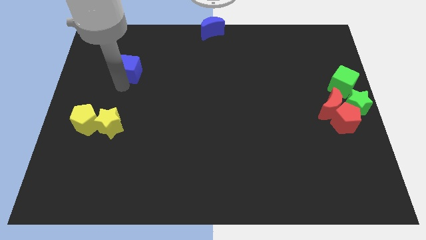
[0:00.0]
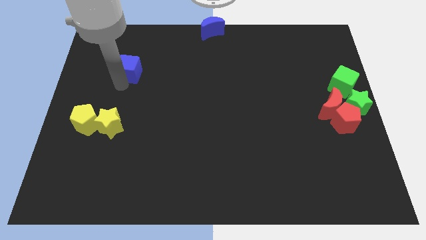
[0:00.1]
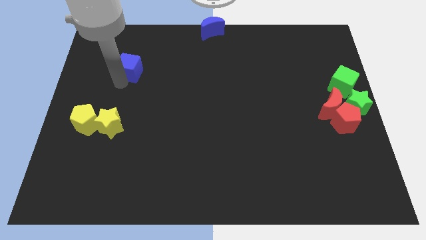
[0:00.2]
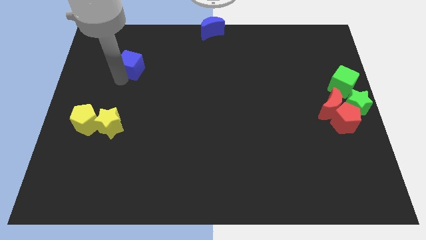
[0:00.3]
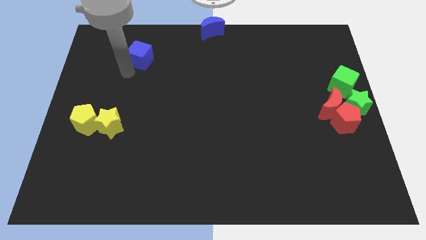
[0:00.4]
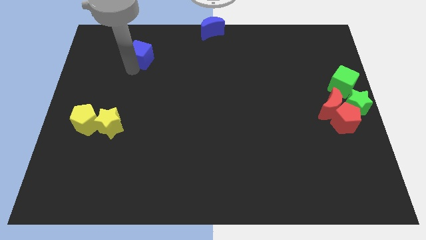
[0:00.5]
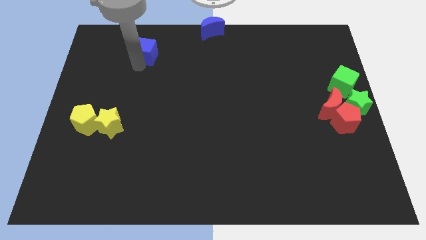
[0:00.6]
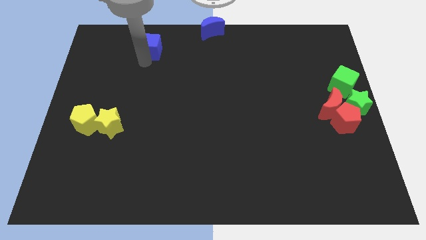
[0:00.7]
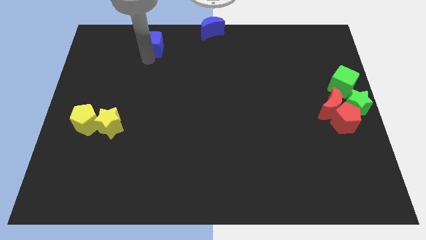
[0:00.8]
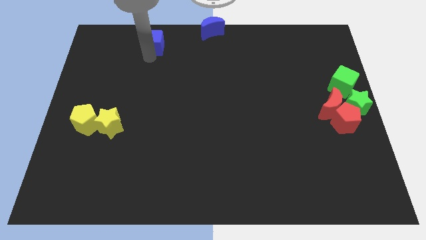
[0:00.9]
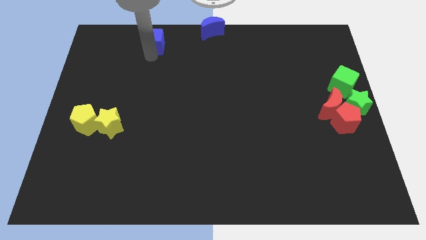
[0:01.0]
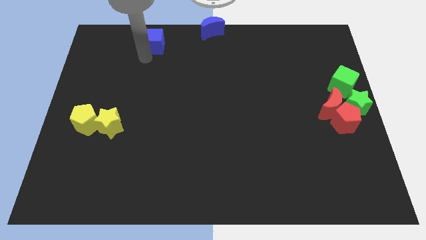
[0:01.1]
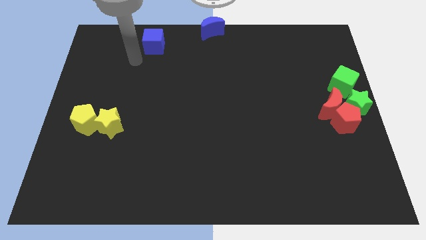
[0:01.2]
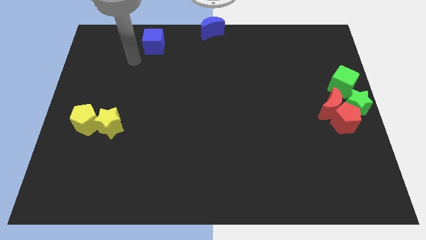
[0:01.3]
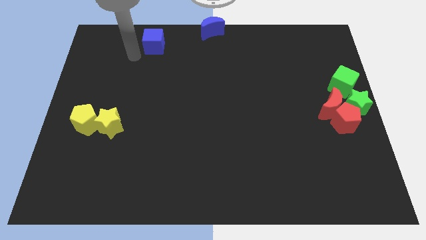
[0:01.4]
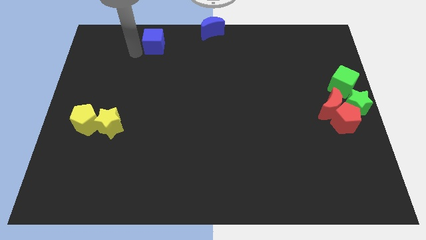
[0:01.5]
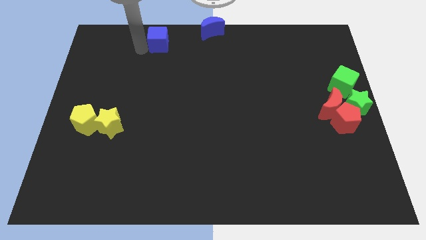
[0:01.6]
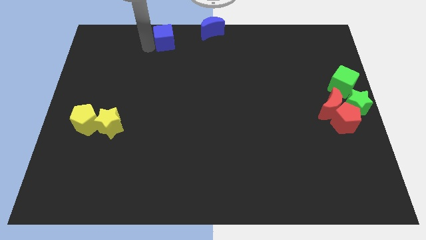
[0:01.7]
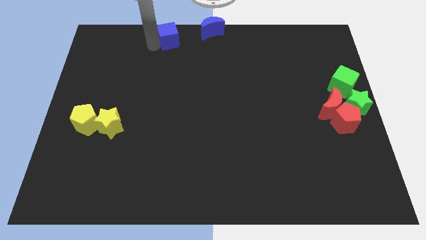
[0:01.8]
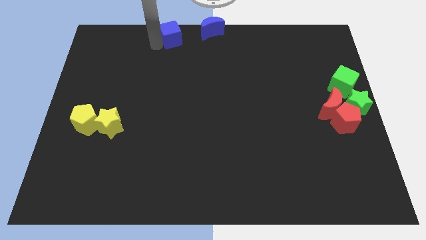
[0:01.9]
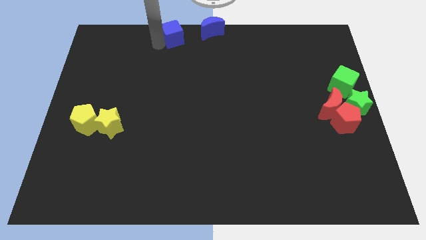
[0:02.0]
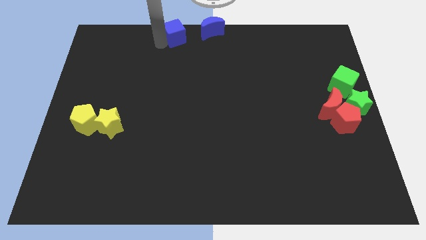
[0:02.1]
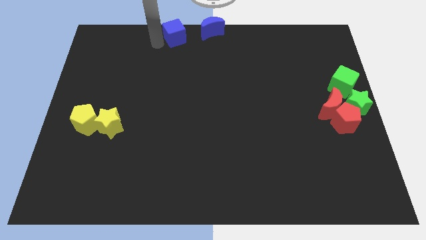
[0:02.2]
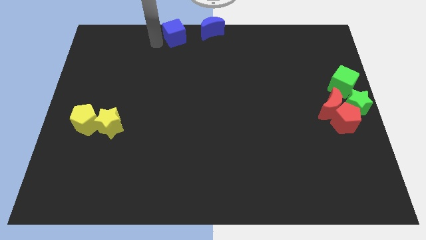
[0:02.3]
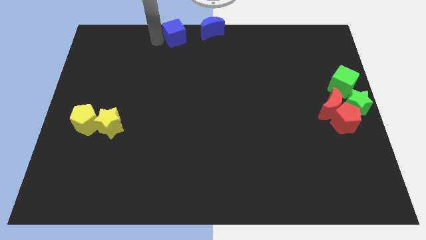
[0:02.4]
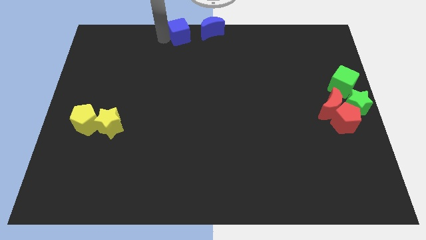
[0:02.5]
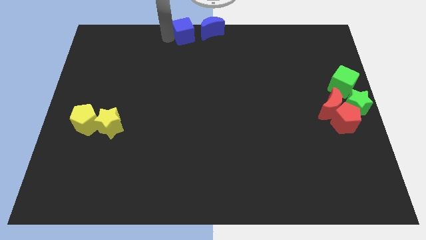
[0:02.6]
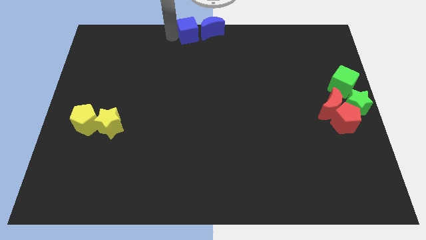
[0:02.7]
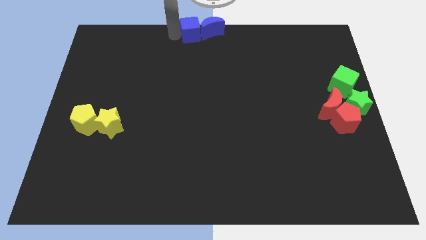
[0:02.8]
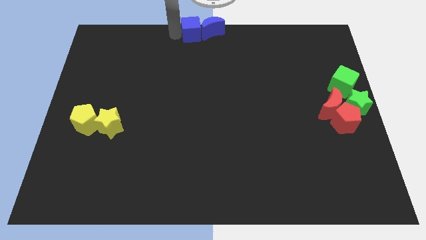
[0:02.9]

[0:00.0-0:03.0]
push blue cube beside blue crescent

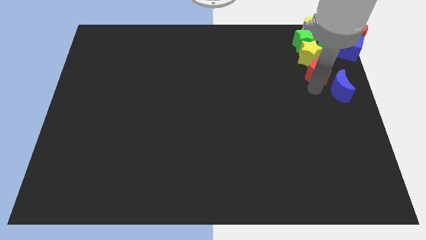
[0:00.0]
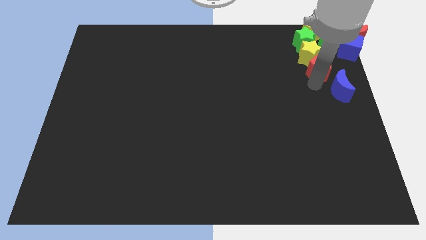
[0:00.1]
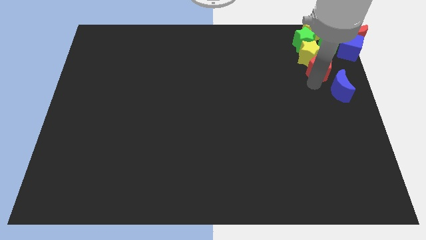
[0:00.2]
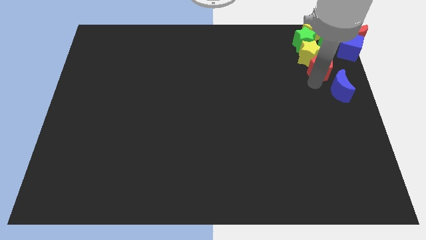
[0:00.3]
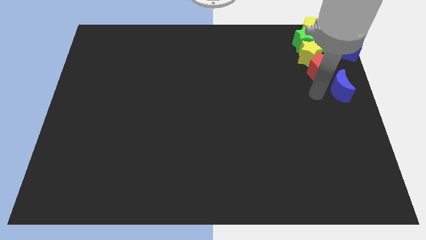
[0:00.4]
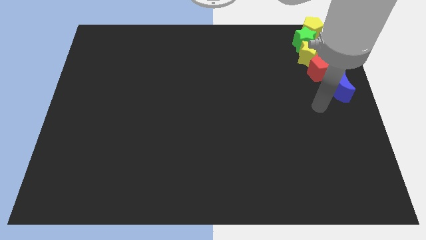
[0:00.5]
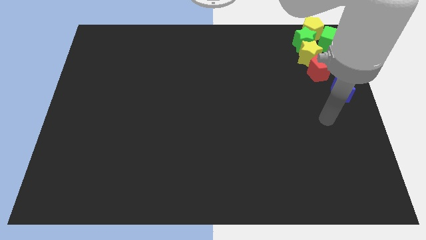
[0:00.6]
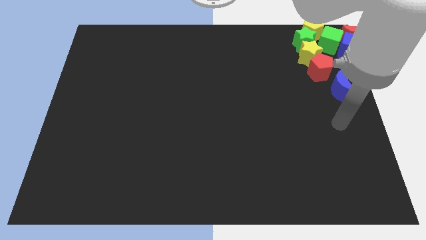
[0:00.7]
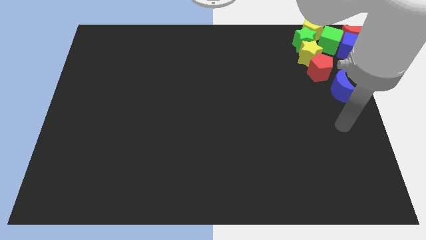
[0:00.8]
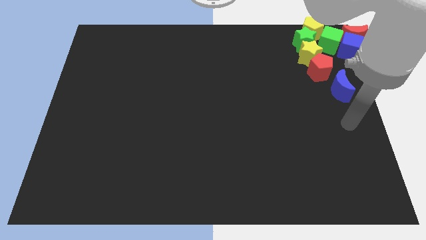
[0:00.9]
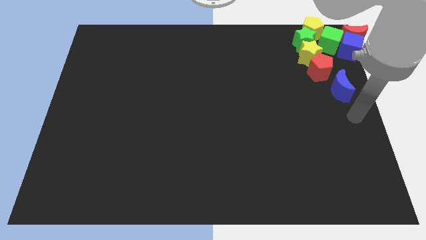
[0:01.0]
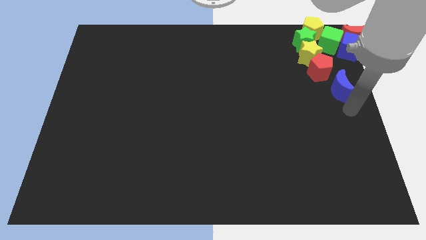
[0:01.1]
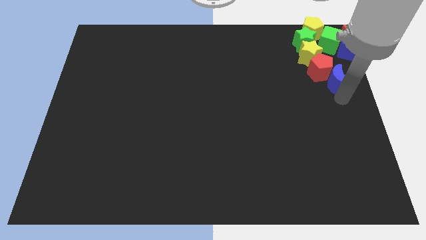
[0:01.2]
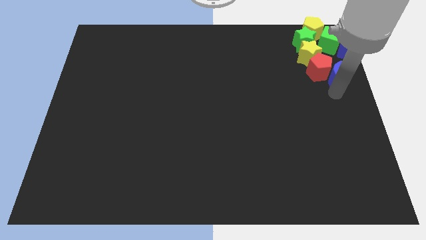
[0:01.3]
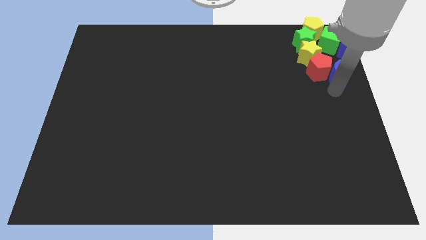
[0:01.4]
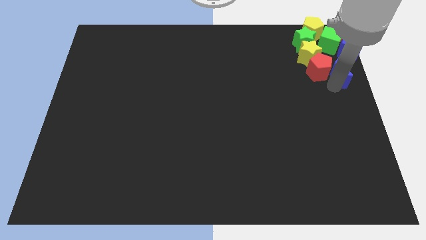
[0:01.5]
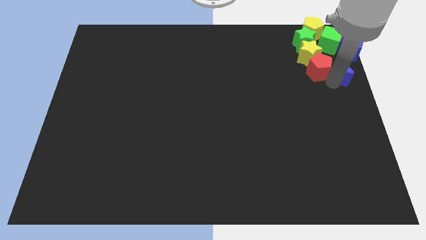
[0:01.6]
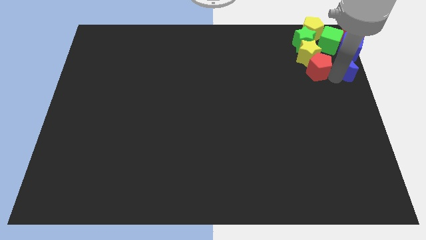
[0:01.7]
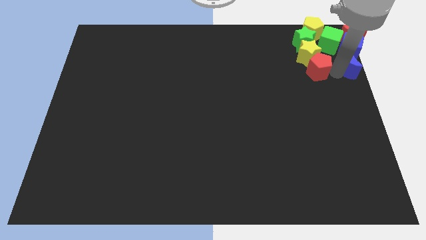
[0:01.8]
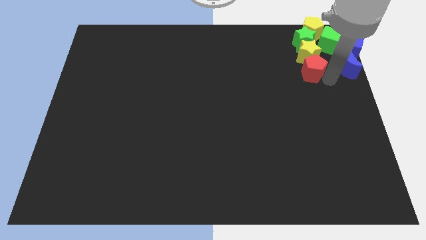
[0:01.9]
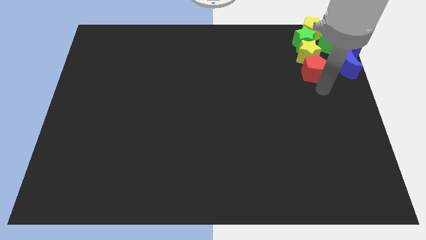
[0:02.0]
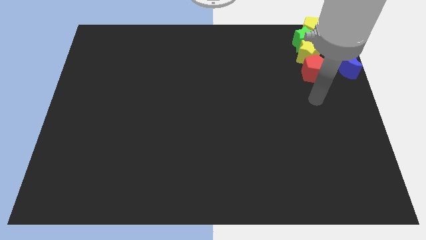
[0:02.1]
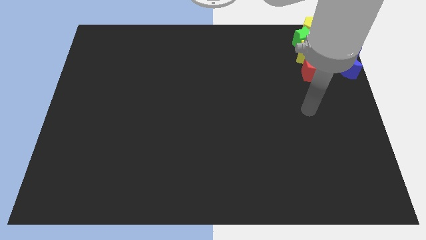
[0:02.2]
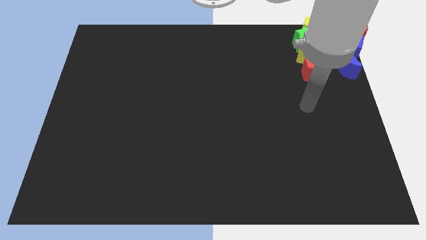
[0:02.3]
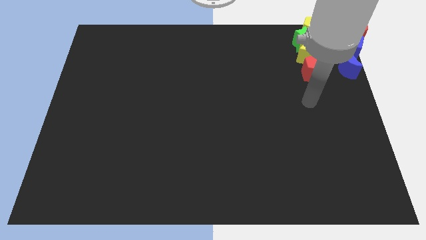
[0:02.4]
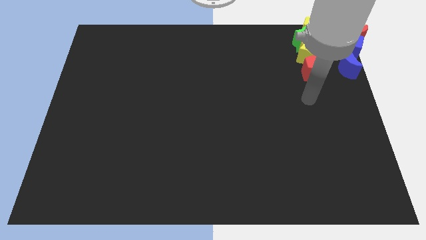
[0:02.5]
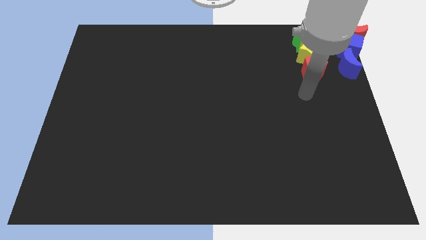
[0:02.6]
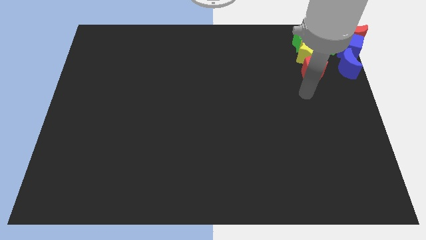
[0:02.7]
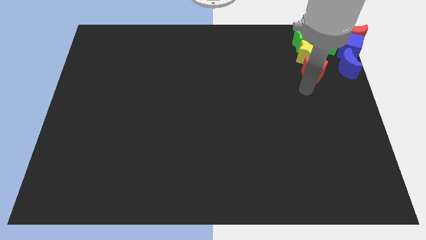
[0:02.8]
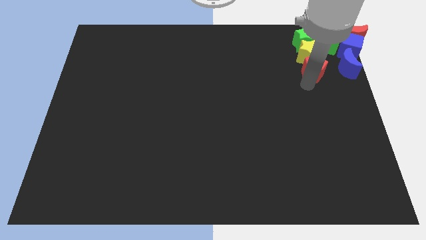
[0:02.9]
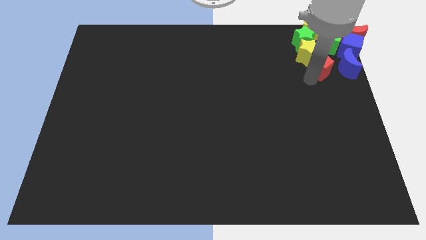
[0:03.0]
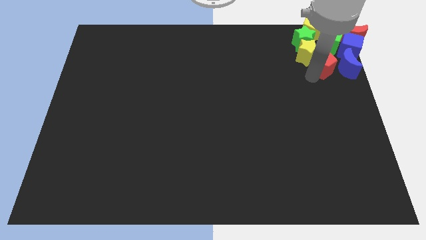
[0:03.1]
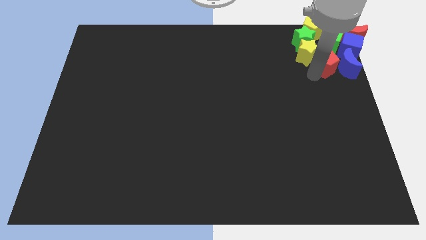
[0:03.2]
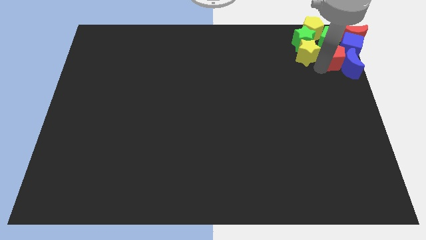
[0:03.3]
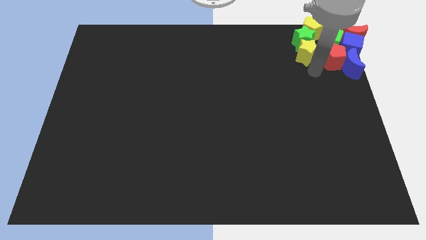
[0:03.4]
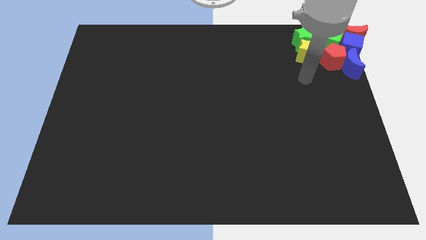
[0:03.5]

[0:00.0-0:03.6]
place the blue moon to bottom of the blue cube

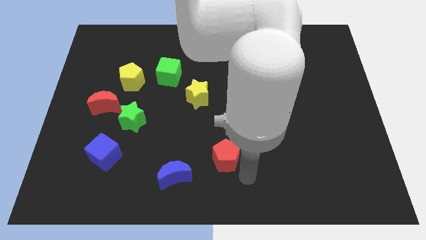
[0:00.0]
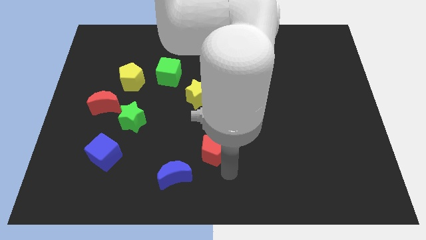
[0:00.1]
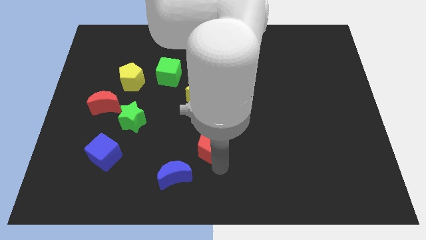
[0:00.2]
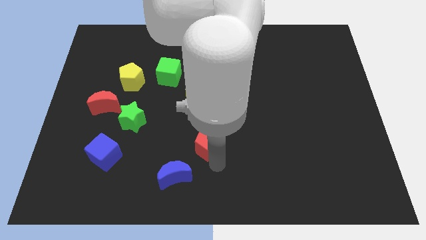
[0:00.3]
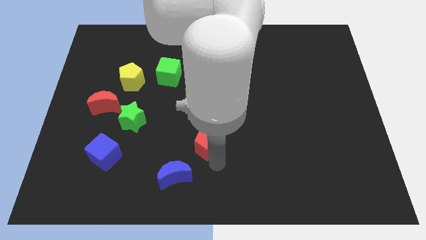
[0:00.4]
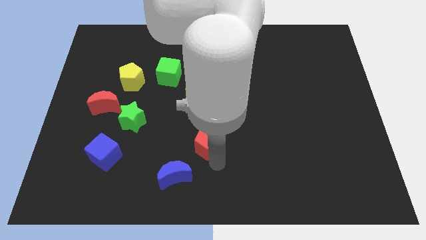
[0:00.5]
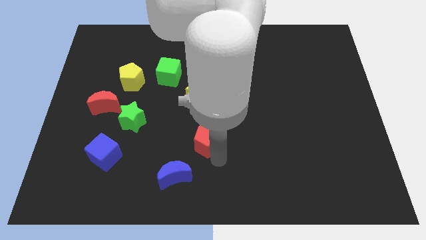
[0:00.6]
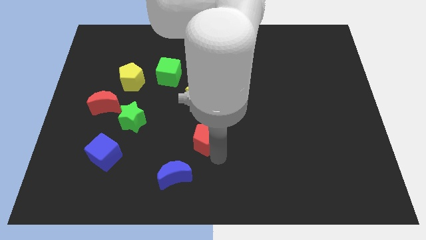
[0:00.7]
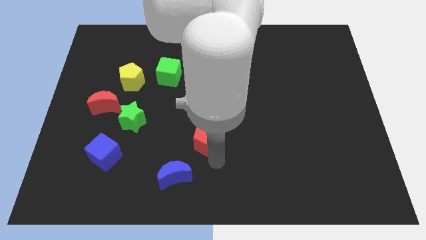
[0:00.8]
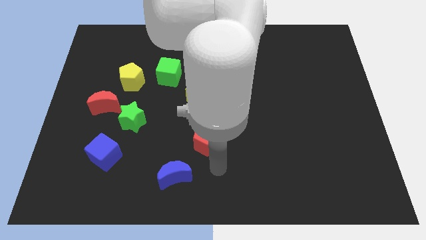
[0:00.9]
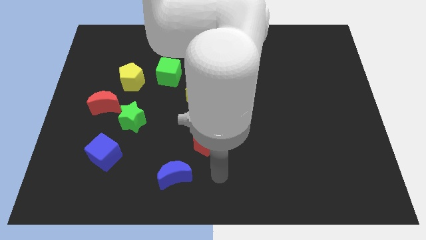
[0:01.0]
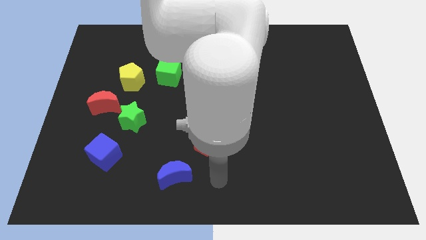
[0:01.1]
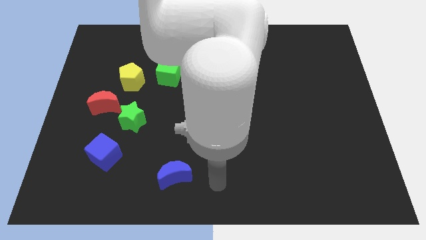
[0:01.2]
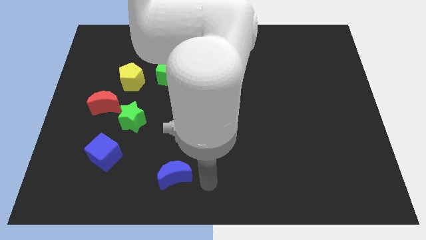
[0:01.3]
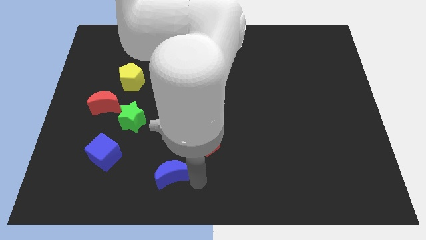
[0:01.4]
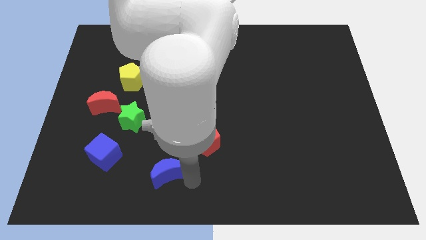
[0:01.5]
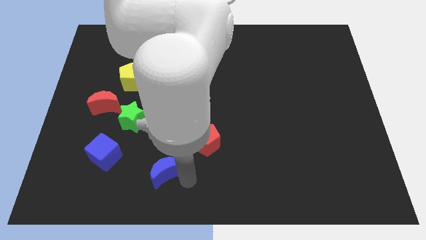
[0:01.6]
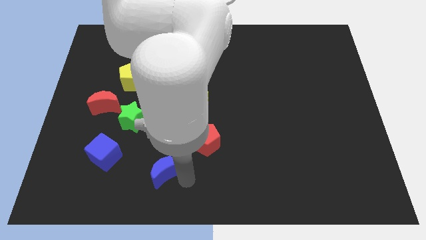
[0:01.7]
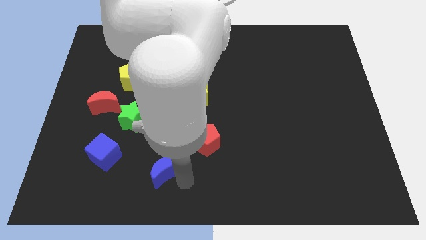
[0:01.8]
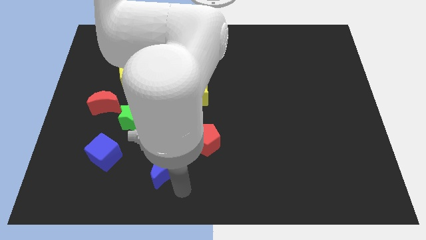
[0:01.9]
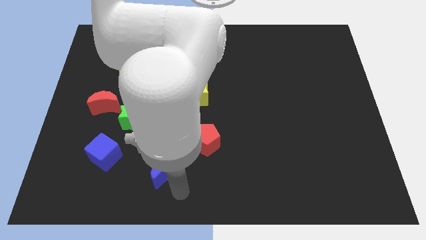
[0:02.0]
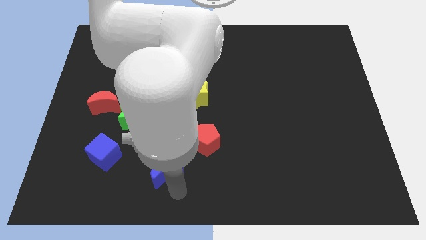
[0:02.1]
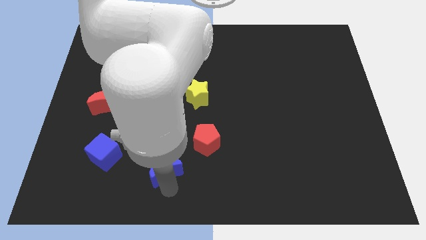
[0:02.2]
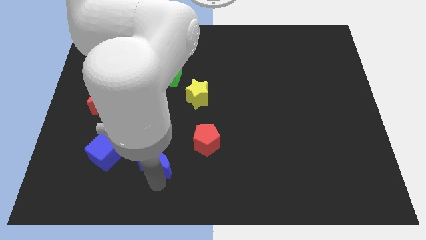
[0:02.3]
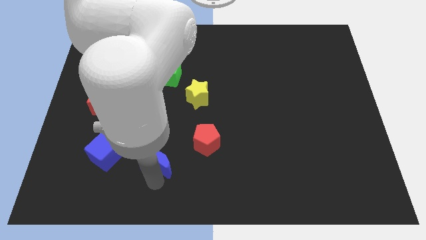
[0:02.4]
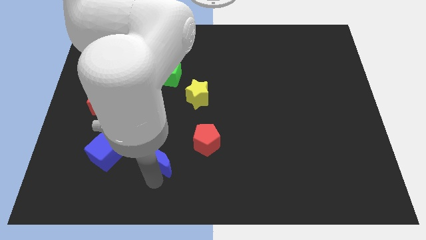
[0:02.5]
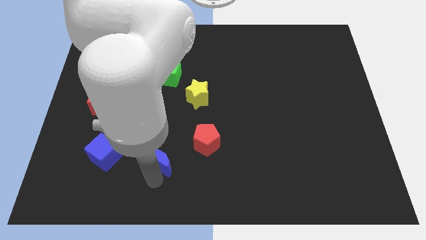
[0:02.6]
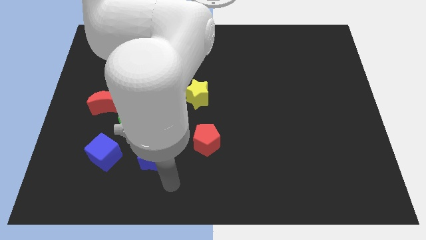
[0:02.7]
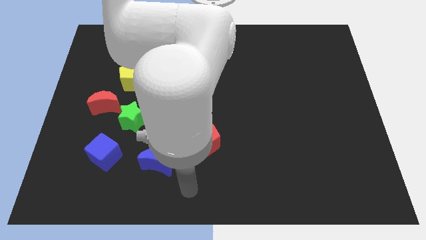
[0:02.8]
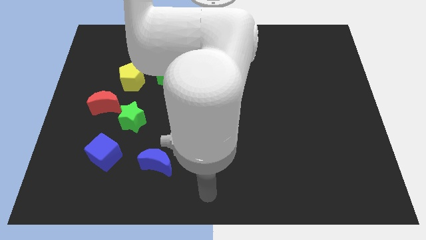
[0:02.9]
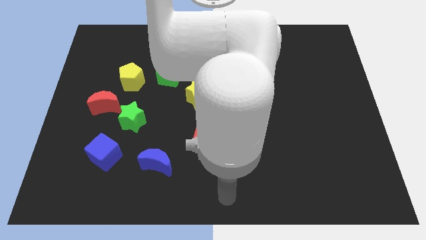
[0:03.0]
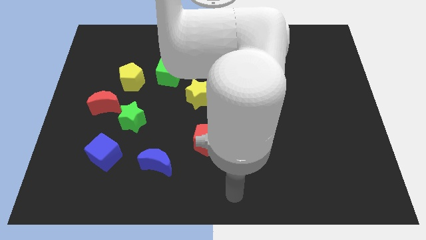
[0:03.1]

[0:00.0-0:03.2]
place the blue moon right to the blue cube
